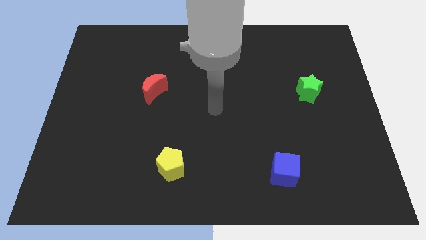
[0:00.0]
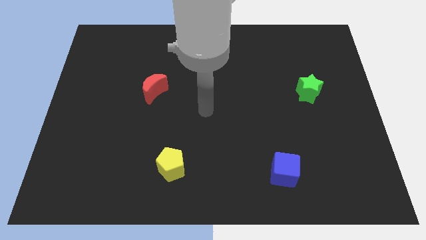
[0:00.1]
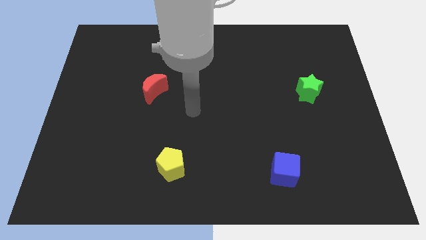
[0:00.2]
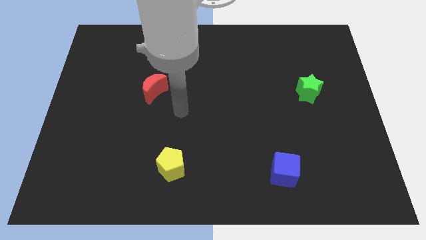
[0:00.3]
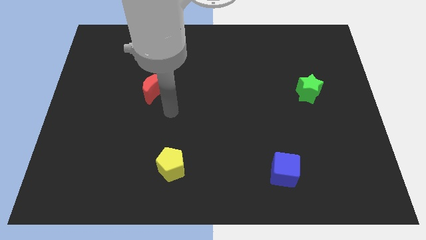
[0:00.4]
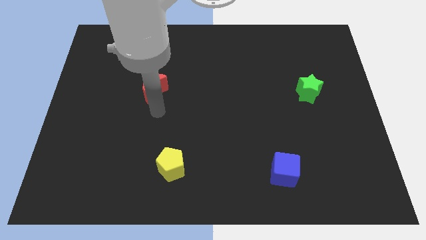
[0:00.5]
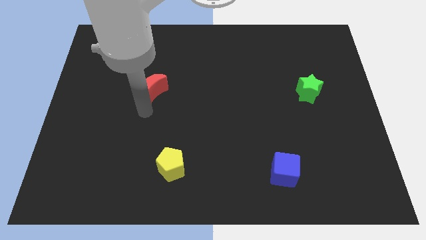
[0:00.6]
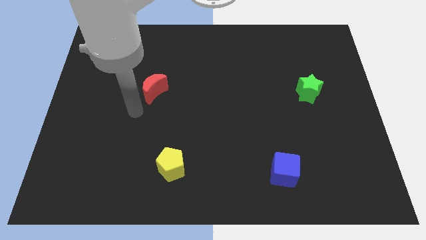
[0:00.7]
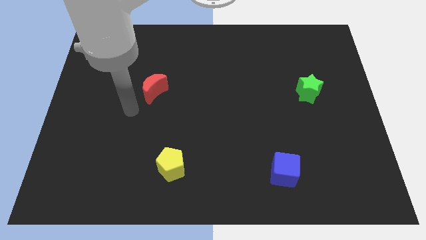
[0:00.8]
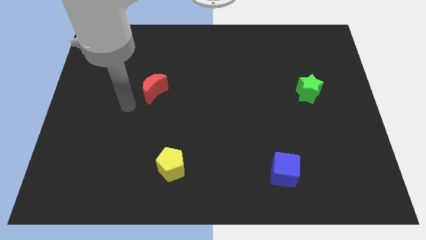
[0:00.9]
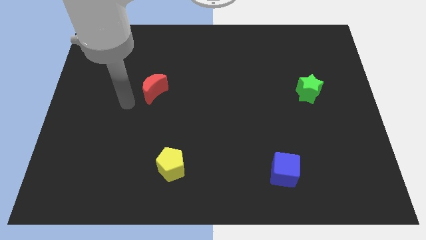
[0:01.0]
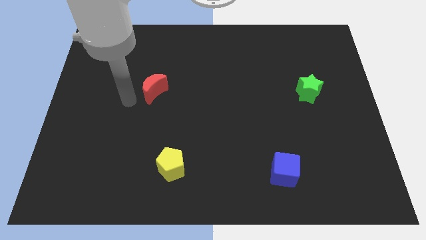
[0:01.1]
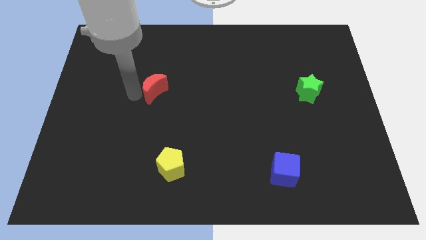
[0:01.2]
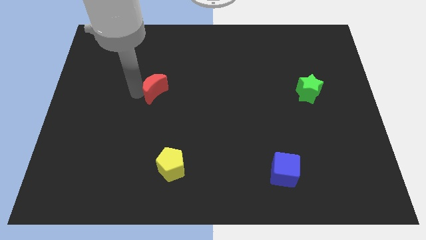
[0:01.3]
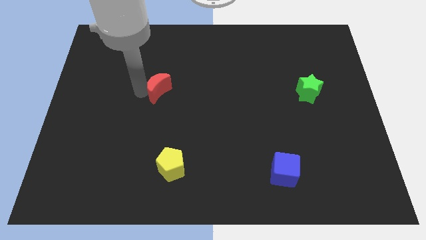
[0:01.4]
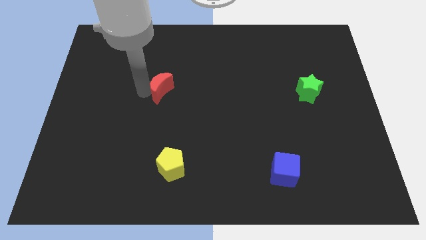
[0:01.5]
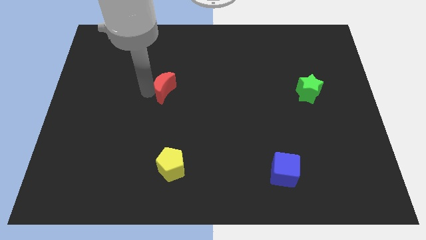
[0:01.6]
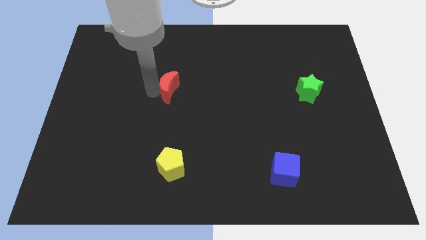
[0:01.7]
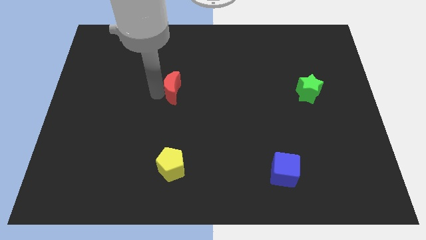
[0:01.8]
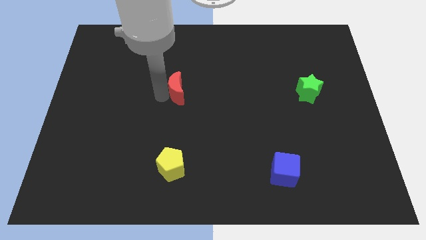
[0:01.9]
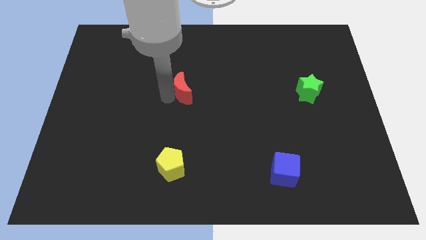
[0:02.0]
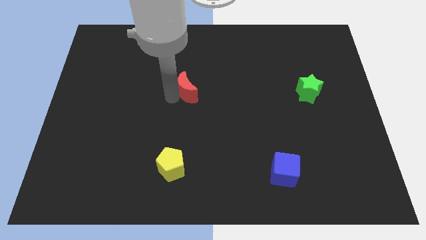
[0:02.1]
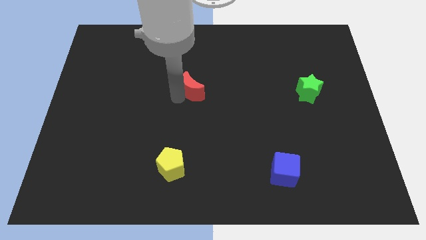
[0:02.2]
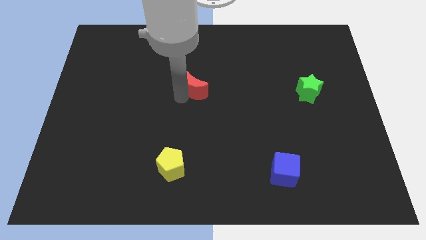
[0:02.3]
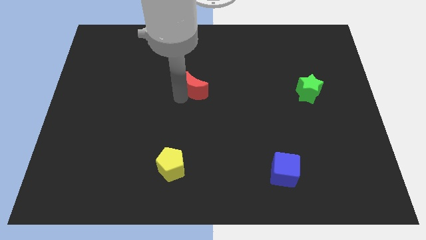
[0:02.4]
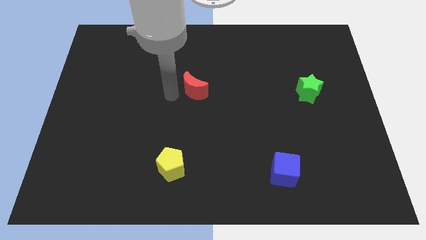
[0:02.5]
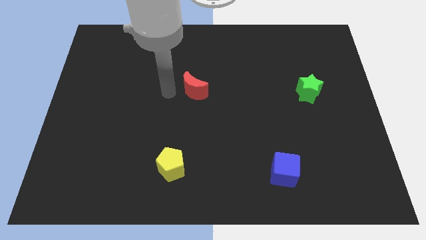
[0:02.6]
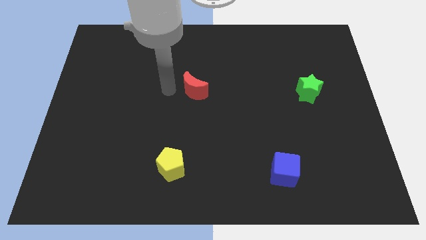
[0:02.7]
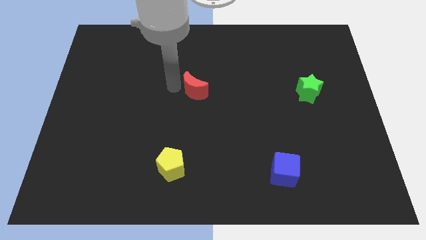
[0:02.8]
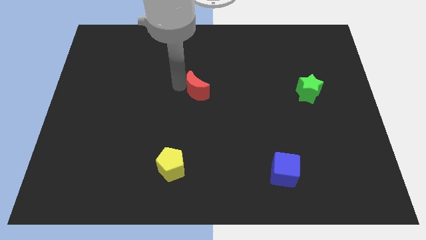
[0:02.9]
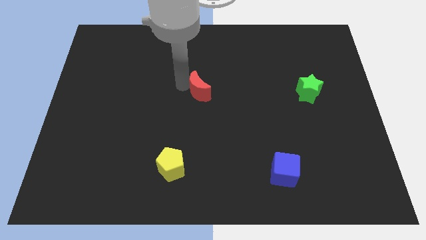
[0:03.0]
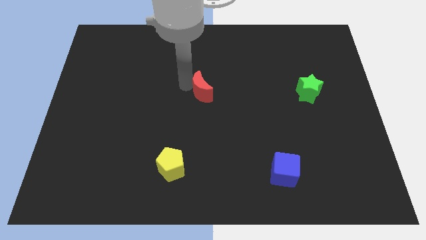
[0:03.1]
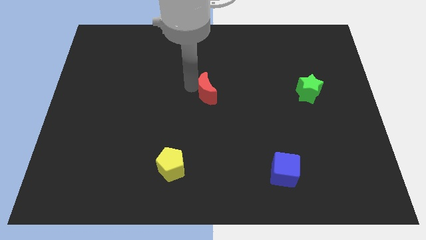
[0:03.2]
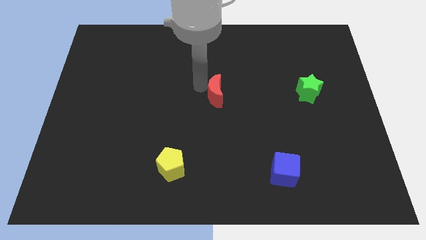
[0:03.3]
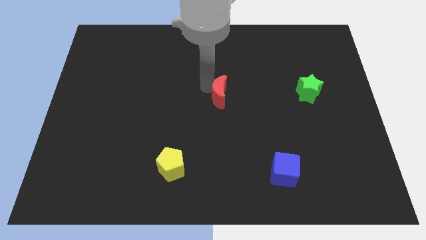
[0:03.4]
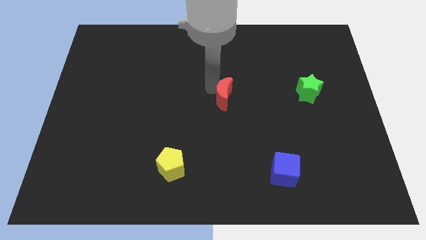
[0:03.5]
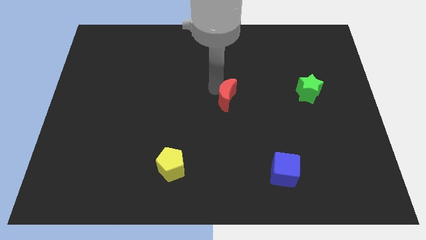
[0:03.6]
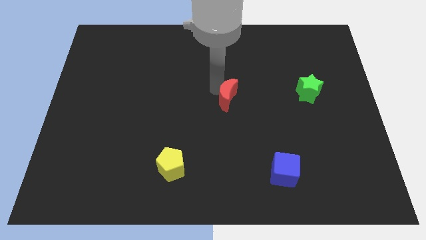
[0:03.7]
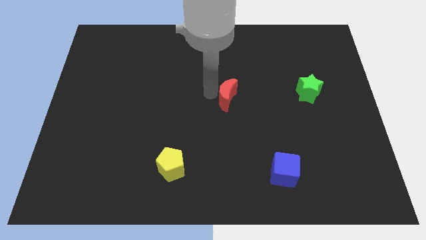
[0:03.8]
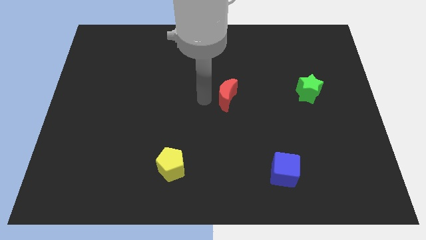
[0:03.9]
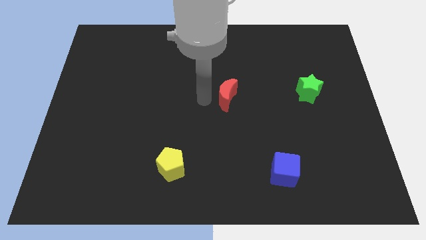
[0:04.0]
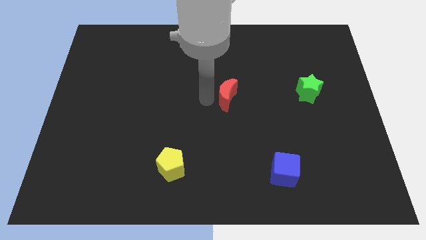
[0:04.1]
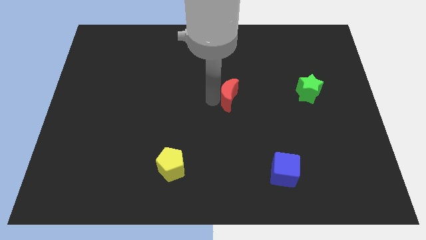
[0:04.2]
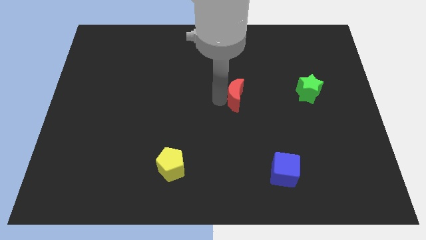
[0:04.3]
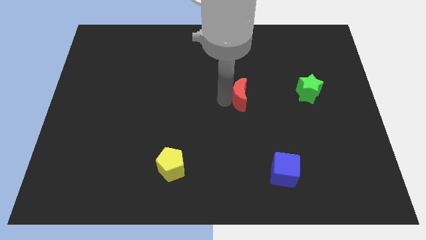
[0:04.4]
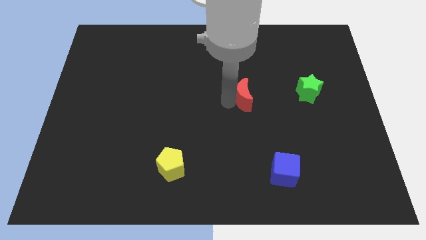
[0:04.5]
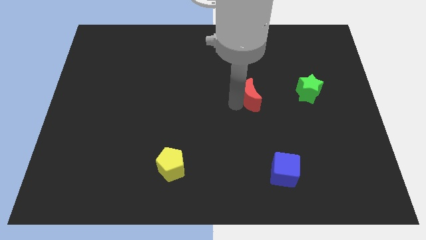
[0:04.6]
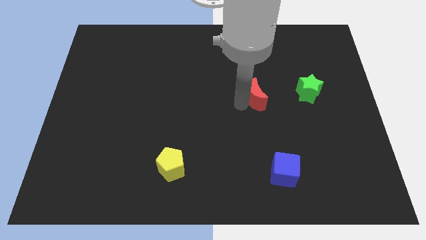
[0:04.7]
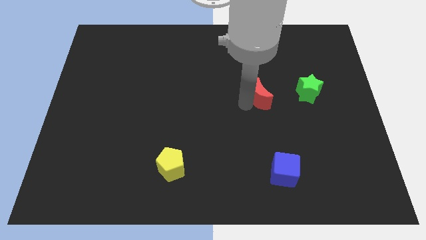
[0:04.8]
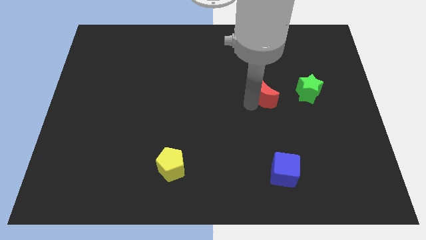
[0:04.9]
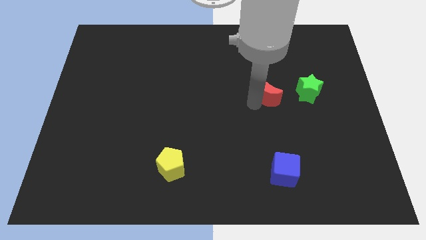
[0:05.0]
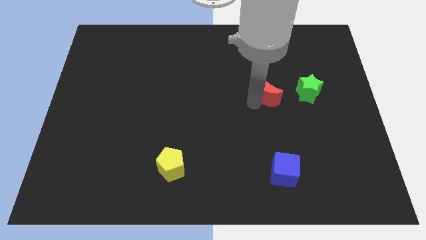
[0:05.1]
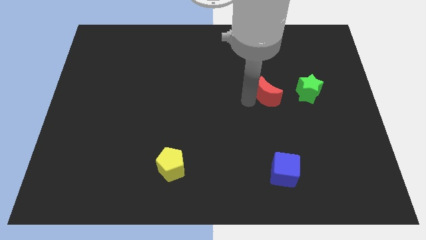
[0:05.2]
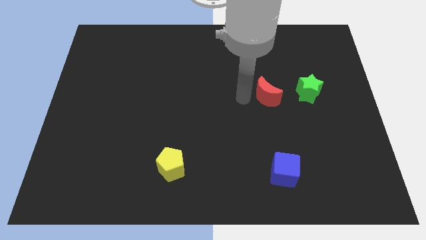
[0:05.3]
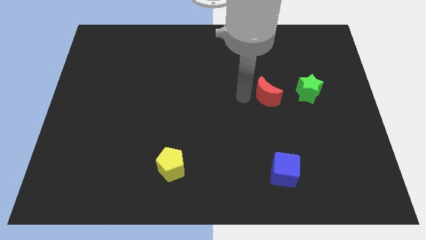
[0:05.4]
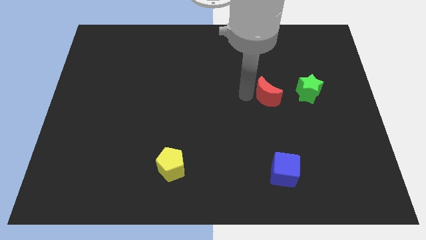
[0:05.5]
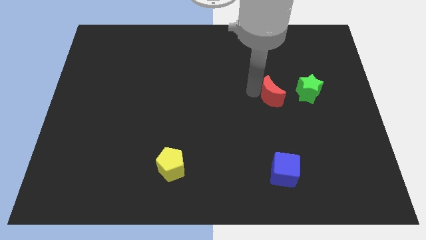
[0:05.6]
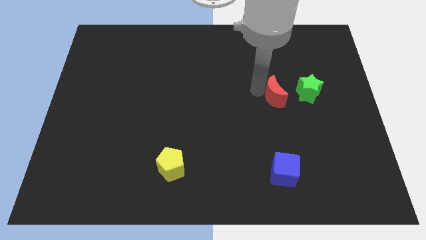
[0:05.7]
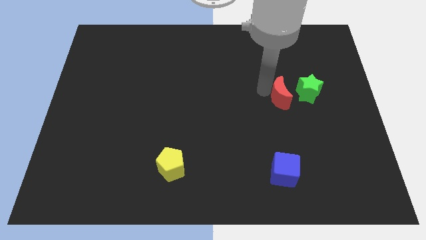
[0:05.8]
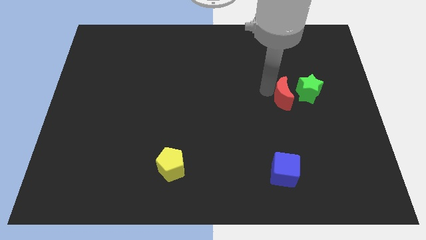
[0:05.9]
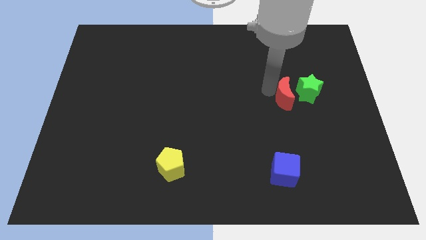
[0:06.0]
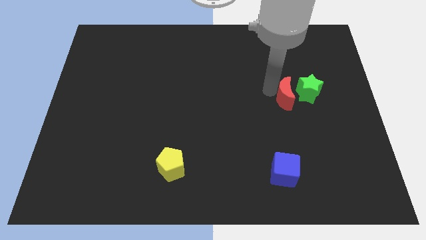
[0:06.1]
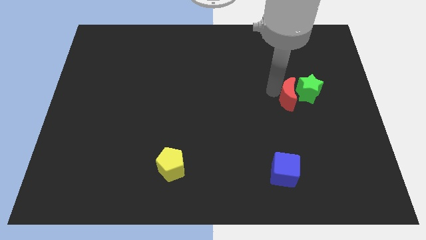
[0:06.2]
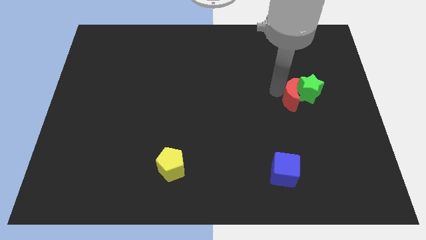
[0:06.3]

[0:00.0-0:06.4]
slide the moon next to the green block

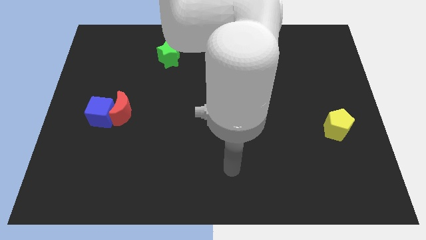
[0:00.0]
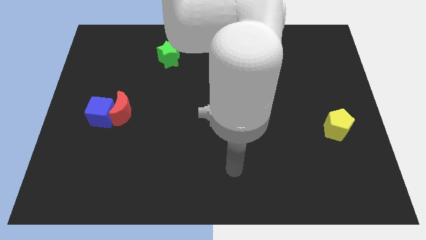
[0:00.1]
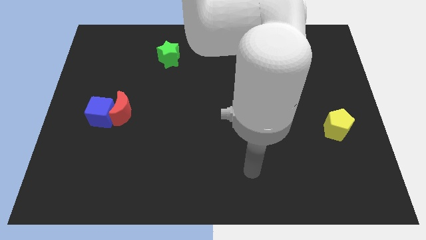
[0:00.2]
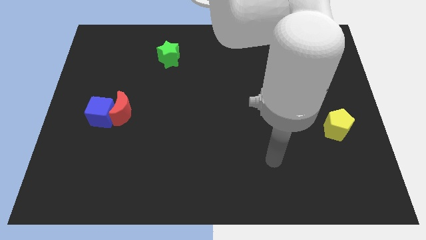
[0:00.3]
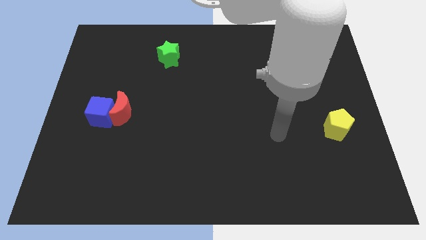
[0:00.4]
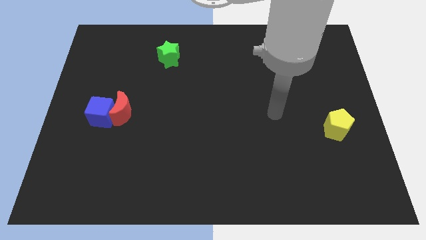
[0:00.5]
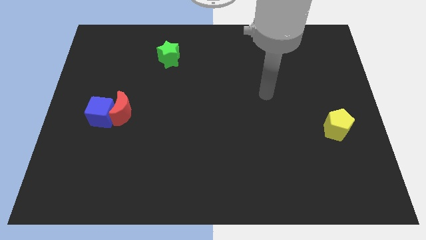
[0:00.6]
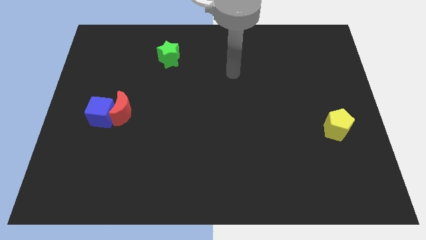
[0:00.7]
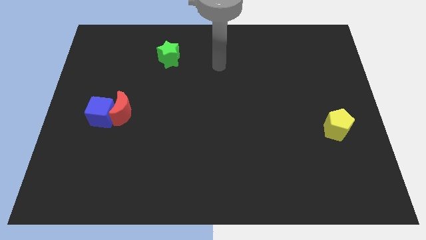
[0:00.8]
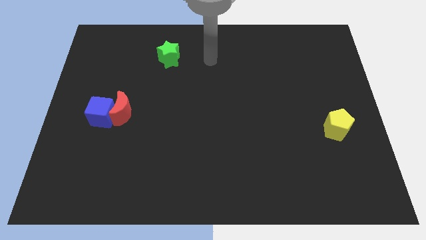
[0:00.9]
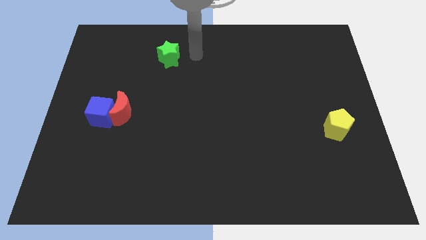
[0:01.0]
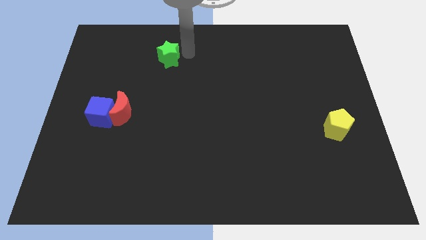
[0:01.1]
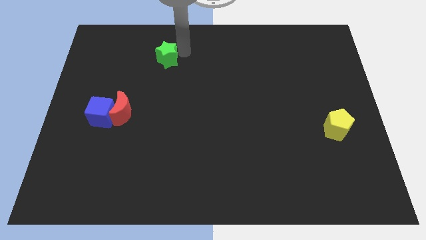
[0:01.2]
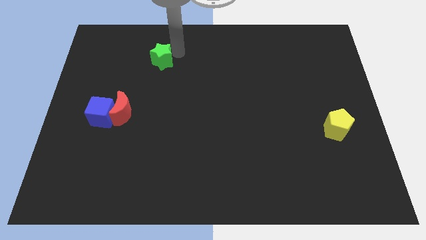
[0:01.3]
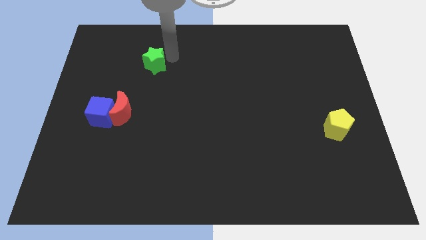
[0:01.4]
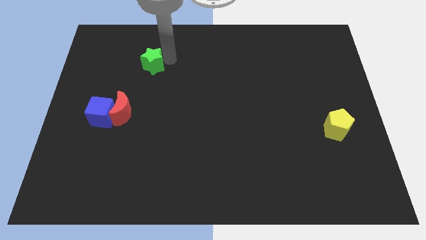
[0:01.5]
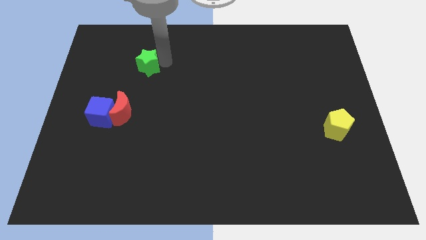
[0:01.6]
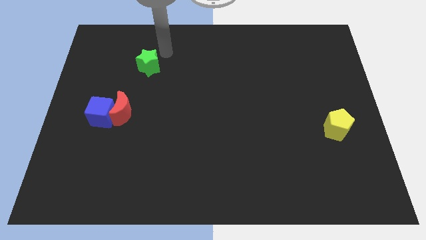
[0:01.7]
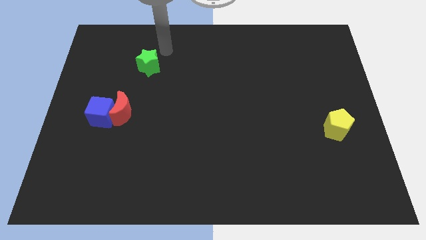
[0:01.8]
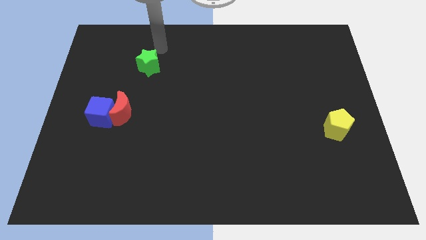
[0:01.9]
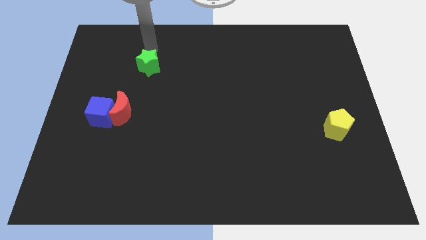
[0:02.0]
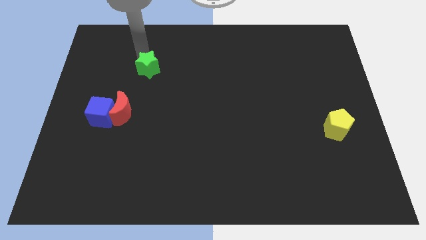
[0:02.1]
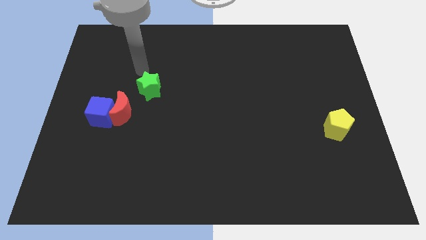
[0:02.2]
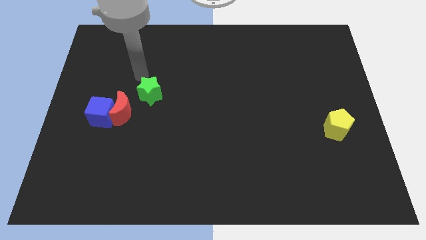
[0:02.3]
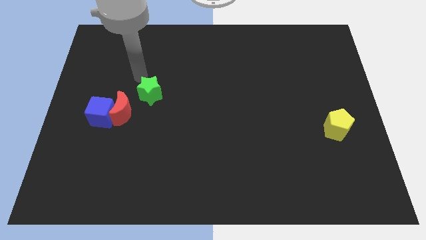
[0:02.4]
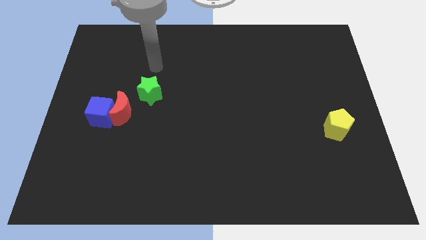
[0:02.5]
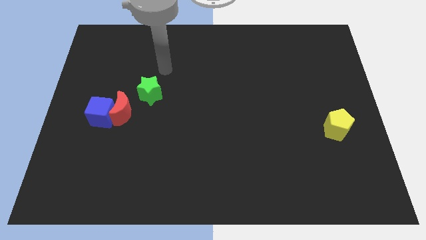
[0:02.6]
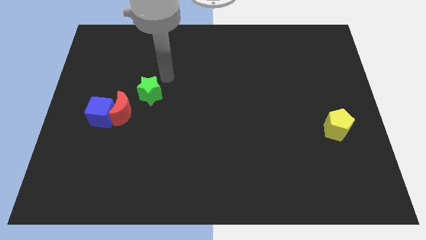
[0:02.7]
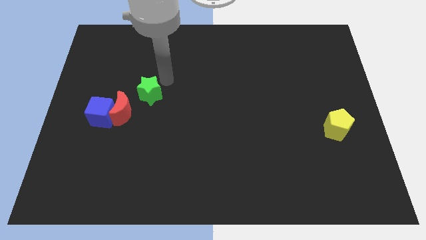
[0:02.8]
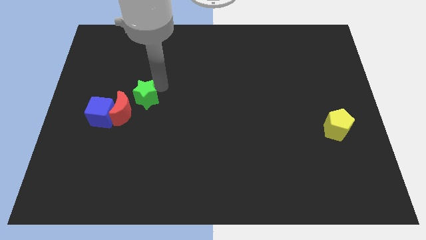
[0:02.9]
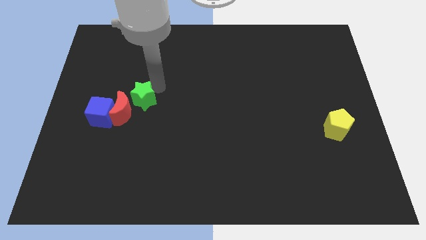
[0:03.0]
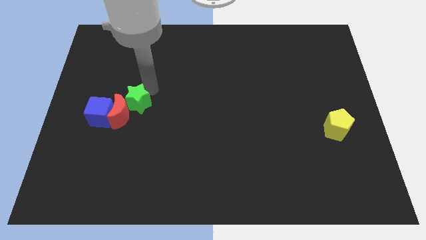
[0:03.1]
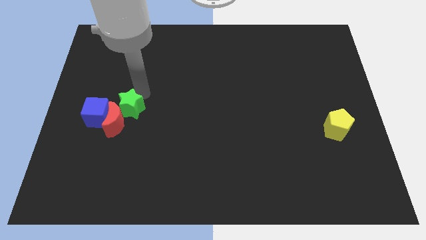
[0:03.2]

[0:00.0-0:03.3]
move the star to the red block
